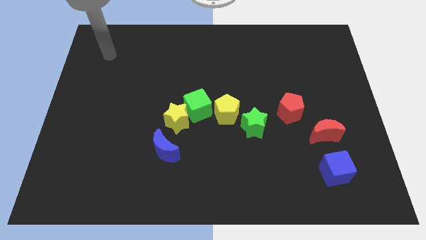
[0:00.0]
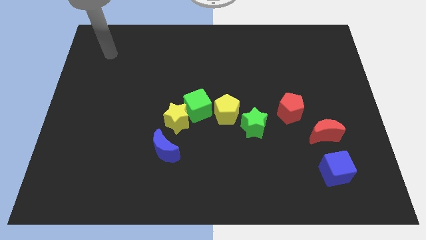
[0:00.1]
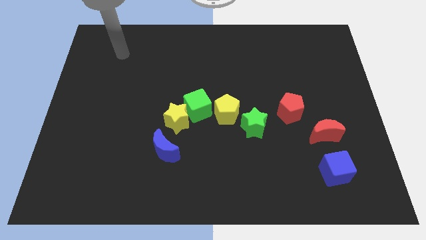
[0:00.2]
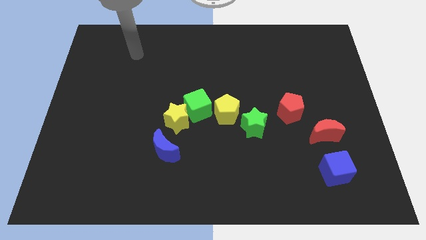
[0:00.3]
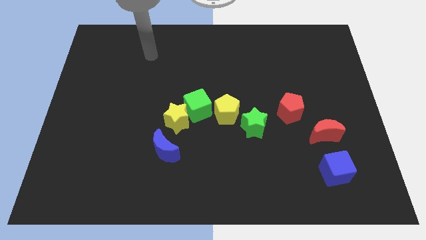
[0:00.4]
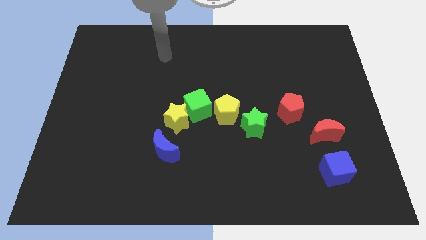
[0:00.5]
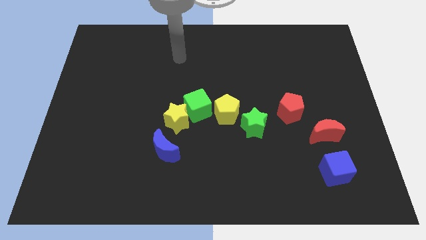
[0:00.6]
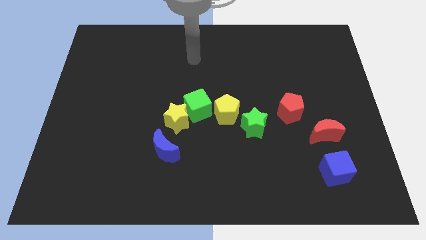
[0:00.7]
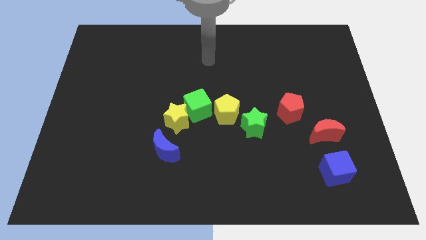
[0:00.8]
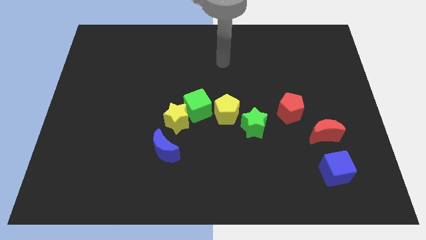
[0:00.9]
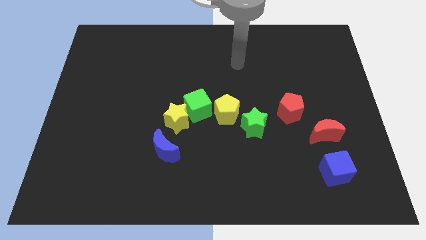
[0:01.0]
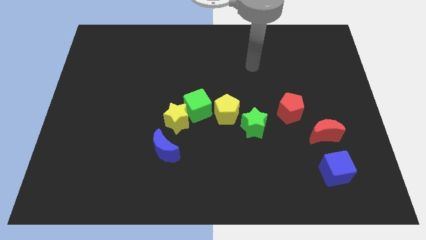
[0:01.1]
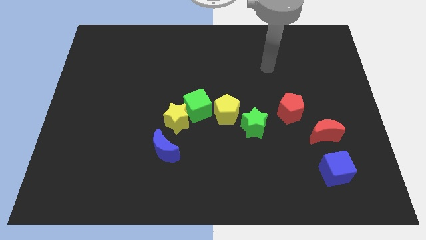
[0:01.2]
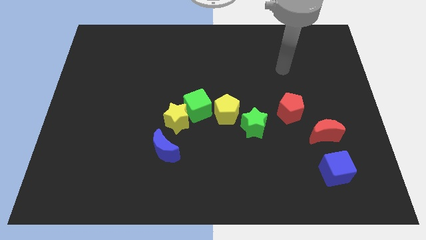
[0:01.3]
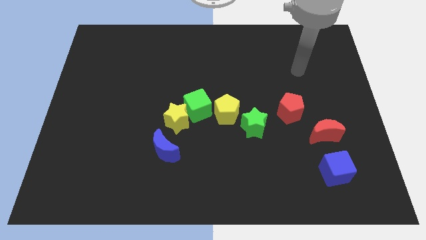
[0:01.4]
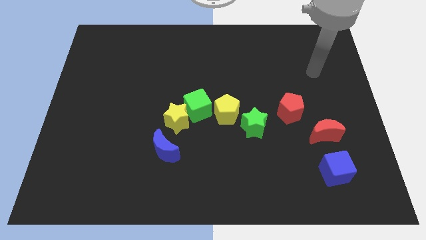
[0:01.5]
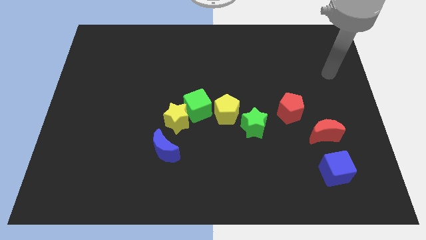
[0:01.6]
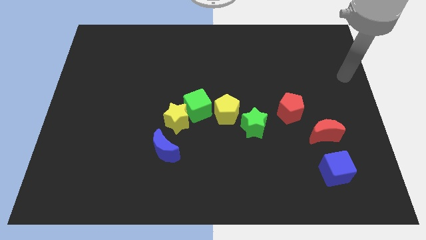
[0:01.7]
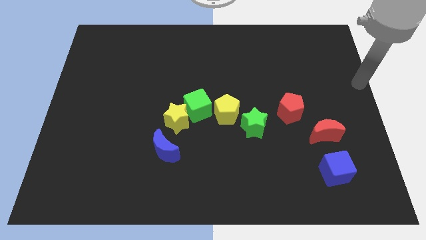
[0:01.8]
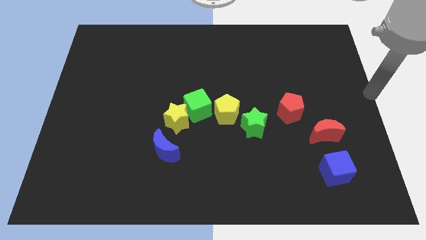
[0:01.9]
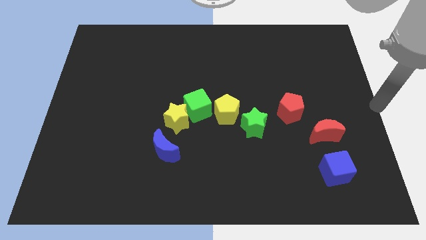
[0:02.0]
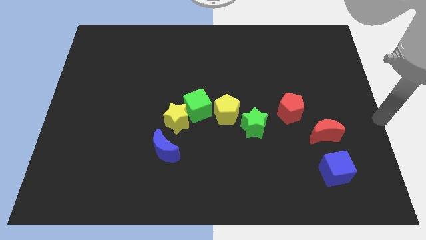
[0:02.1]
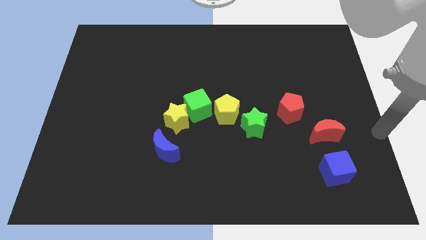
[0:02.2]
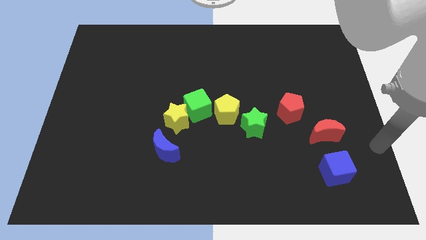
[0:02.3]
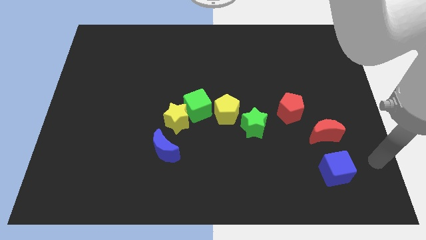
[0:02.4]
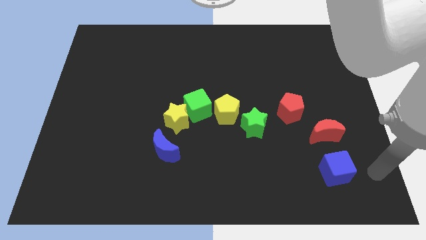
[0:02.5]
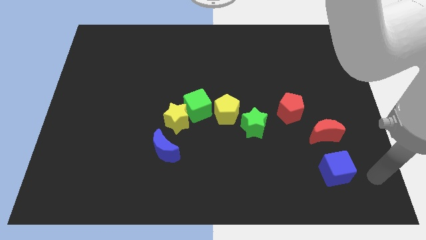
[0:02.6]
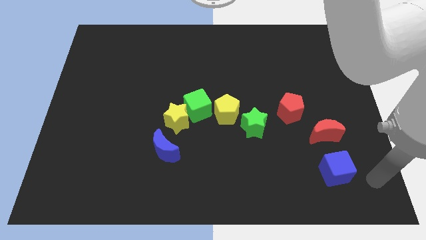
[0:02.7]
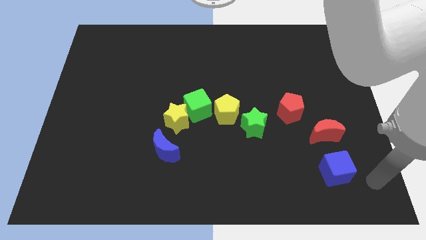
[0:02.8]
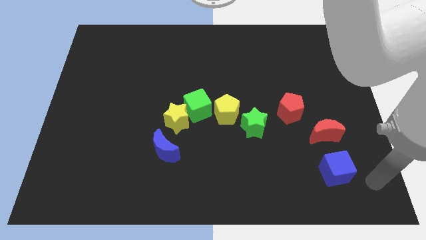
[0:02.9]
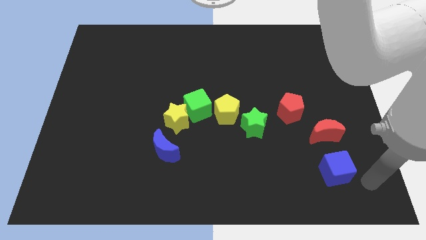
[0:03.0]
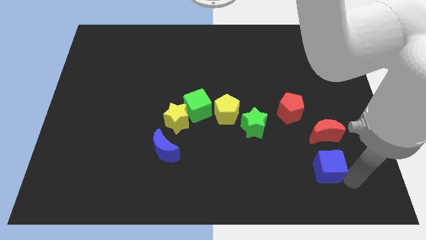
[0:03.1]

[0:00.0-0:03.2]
point the arm at the right side of the blue cube

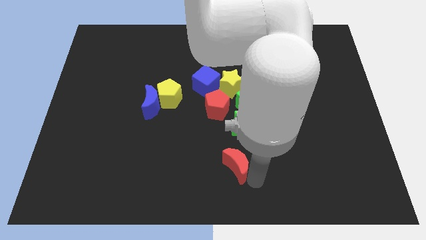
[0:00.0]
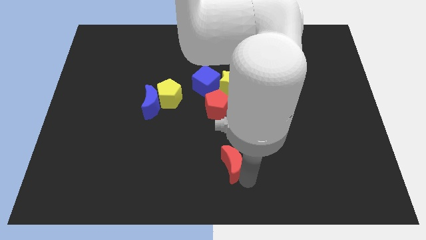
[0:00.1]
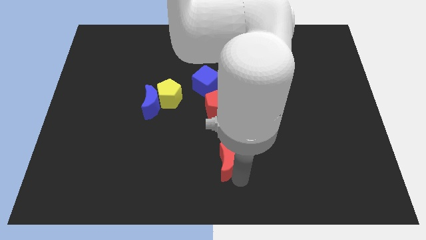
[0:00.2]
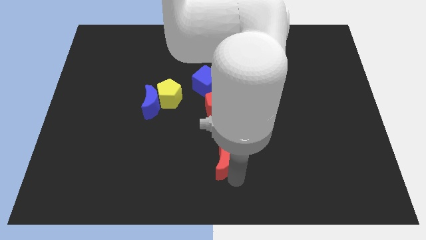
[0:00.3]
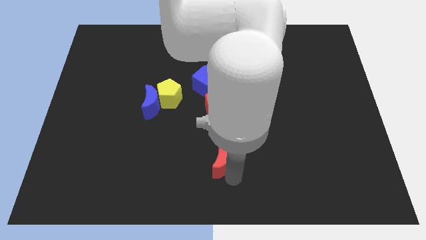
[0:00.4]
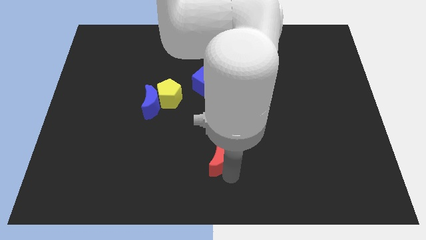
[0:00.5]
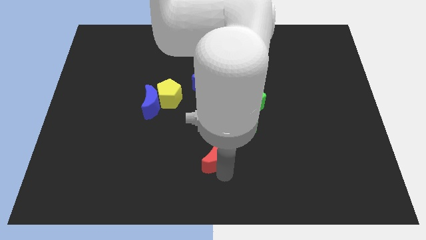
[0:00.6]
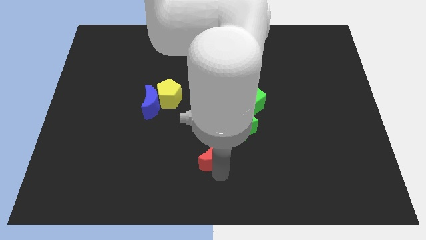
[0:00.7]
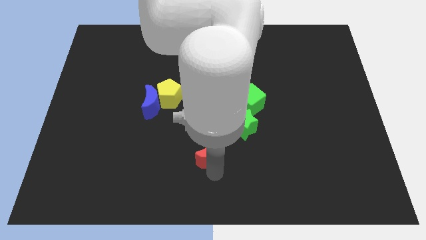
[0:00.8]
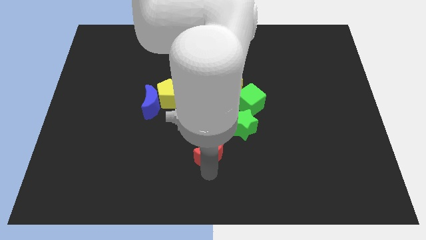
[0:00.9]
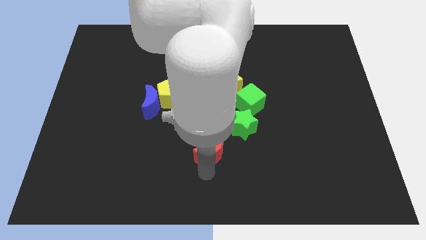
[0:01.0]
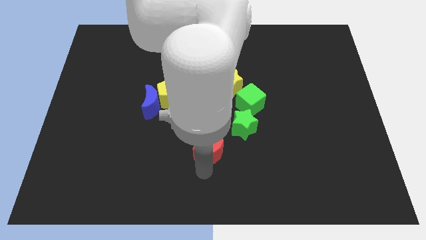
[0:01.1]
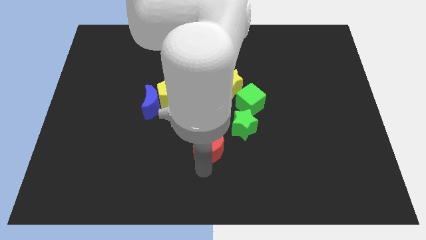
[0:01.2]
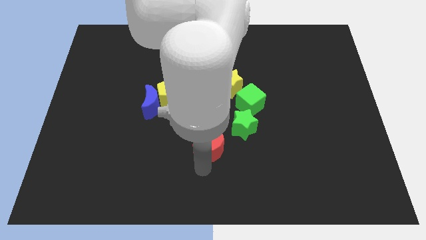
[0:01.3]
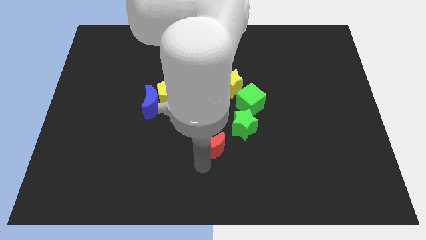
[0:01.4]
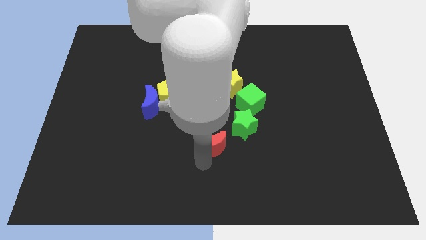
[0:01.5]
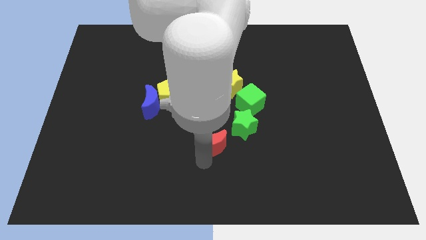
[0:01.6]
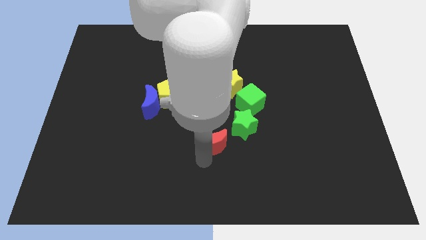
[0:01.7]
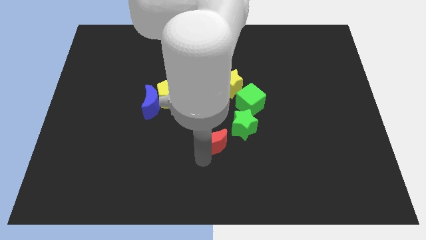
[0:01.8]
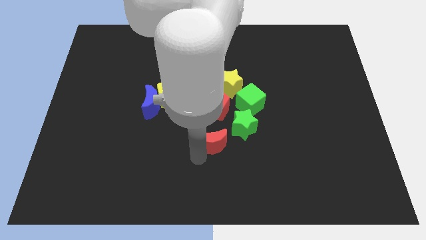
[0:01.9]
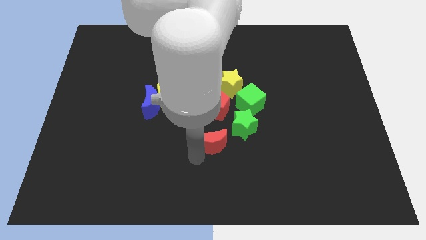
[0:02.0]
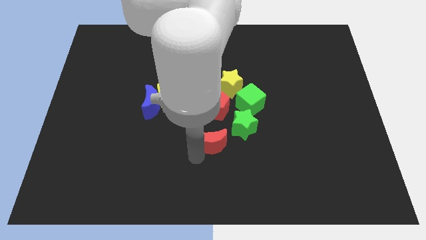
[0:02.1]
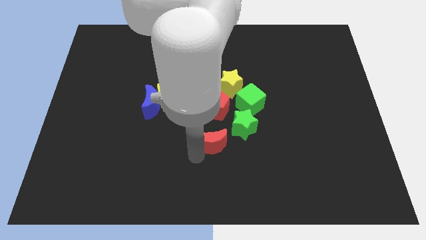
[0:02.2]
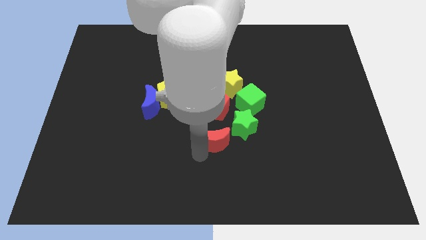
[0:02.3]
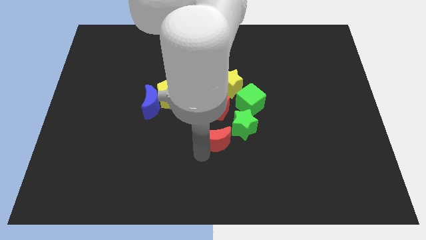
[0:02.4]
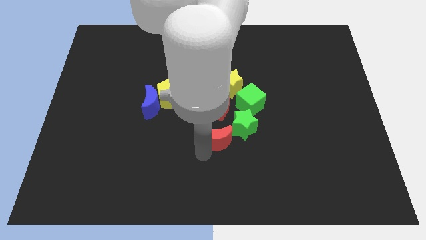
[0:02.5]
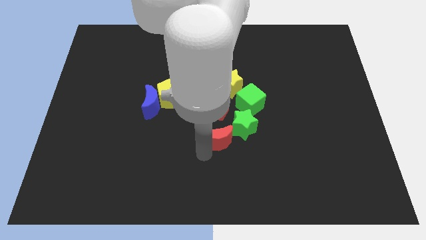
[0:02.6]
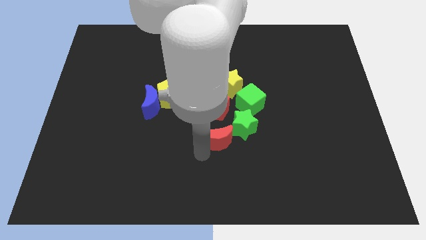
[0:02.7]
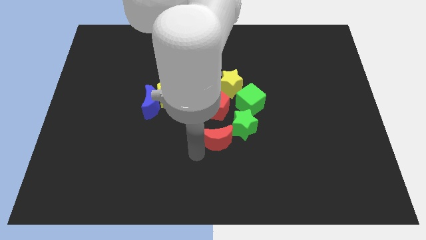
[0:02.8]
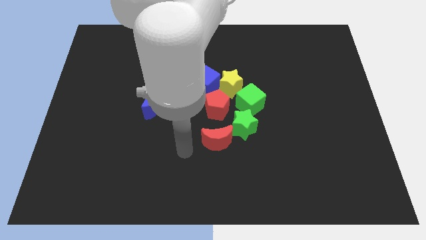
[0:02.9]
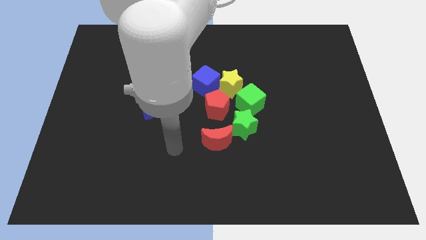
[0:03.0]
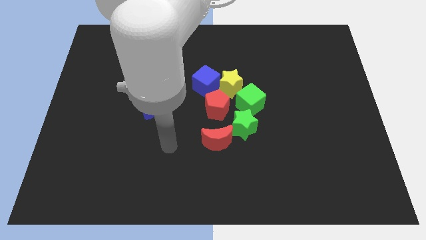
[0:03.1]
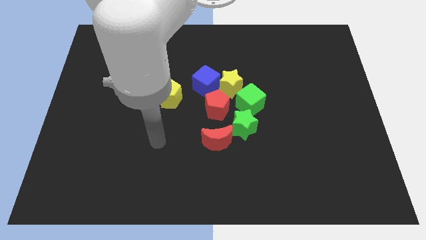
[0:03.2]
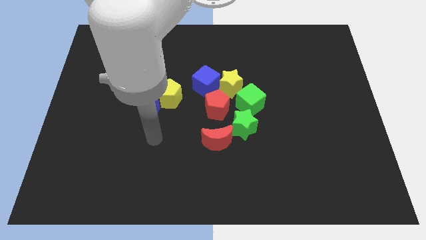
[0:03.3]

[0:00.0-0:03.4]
move red crescent left of green star

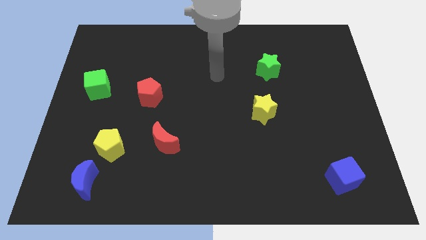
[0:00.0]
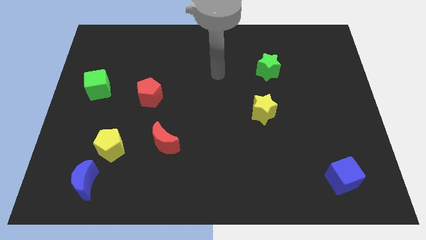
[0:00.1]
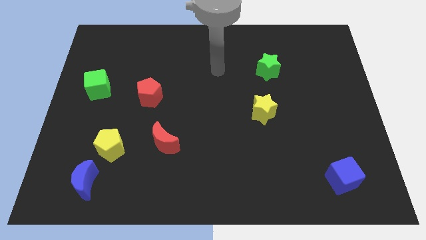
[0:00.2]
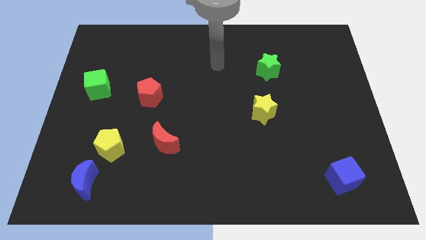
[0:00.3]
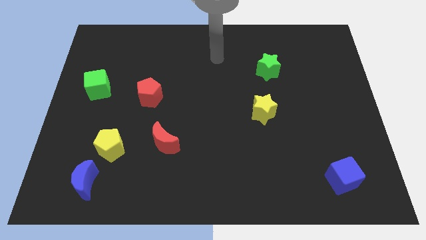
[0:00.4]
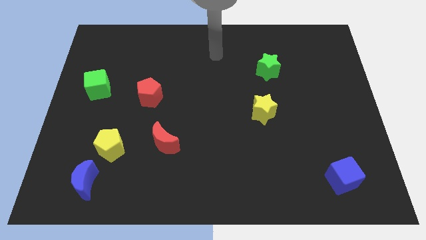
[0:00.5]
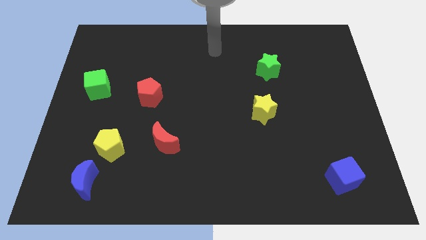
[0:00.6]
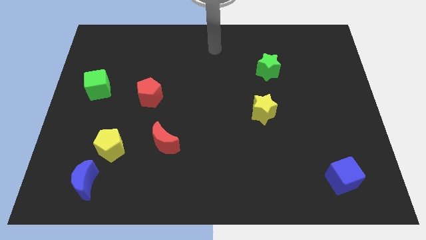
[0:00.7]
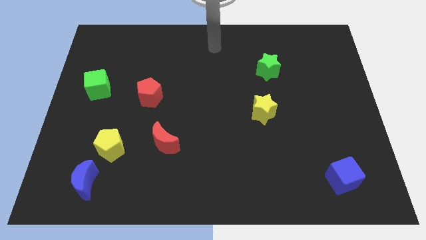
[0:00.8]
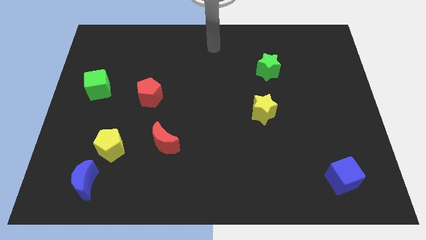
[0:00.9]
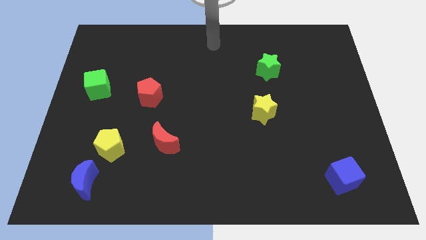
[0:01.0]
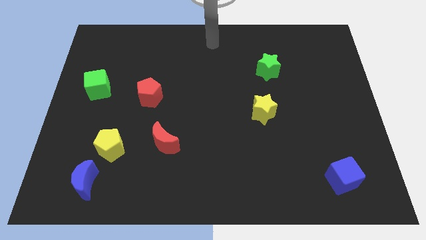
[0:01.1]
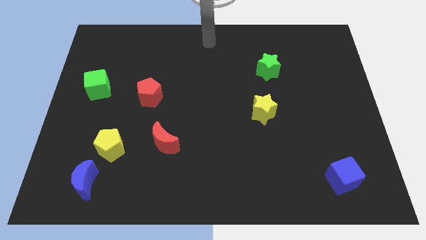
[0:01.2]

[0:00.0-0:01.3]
point your arm at the top center of the board

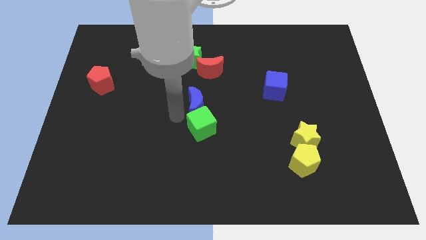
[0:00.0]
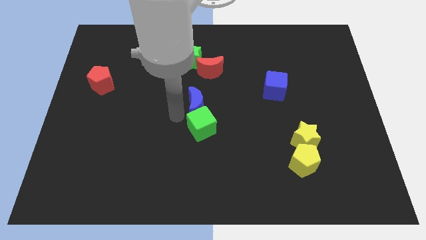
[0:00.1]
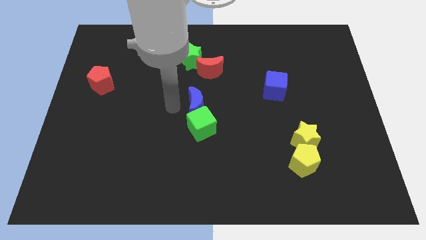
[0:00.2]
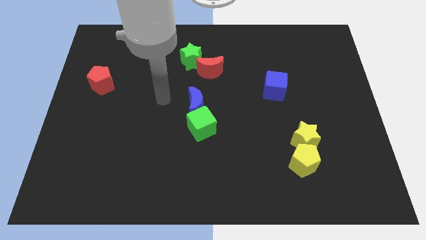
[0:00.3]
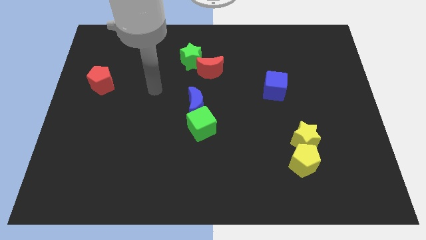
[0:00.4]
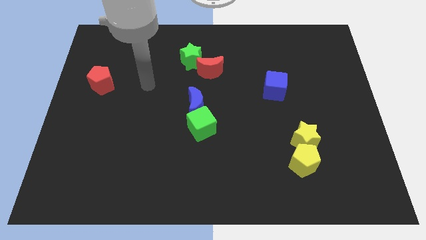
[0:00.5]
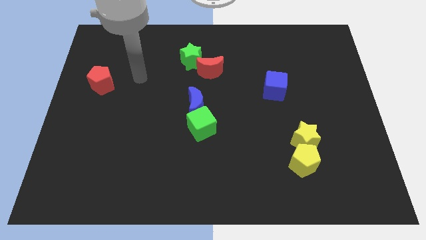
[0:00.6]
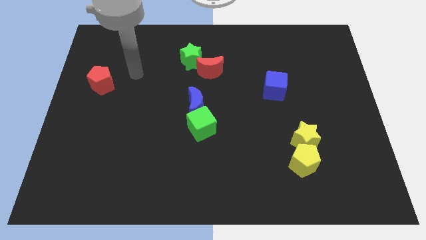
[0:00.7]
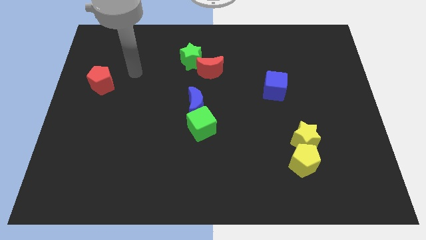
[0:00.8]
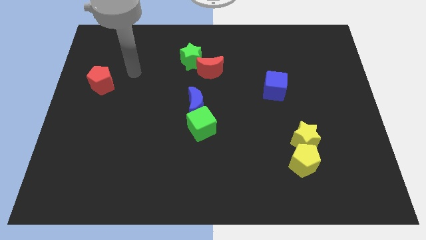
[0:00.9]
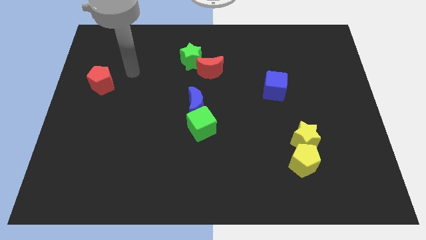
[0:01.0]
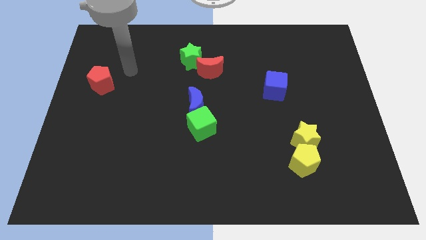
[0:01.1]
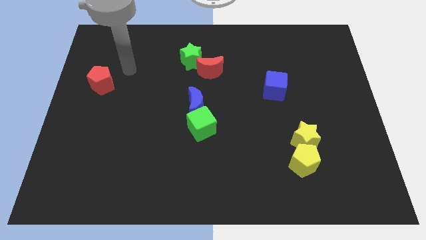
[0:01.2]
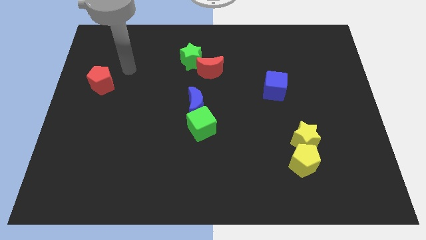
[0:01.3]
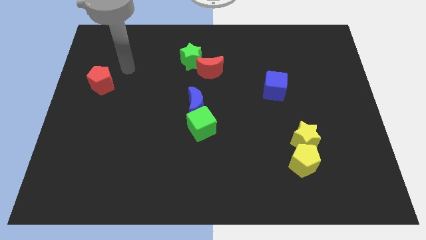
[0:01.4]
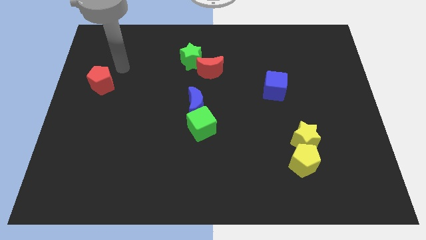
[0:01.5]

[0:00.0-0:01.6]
move your arm away from blue moon
